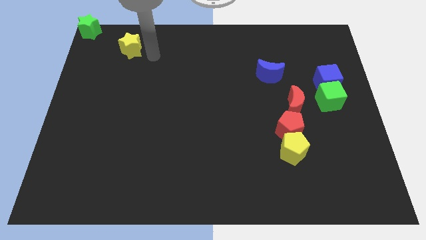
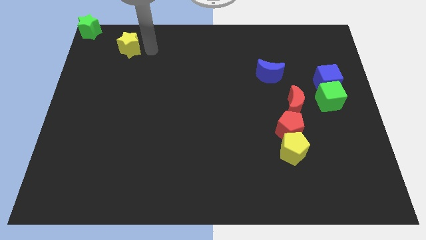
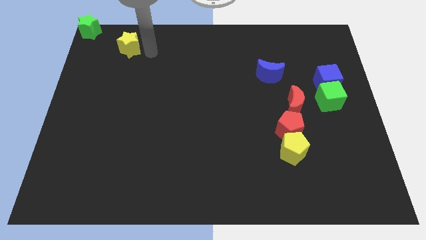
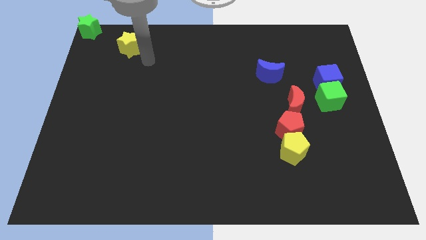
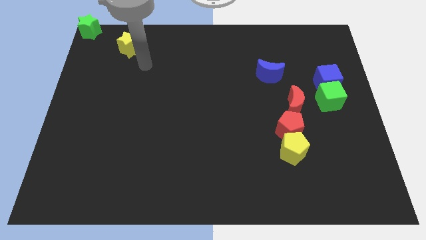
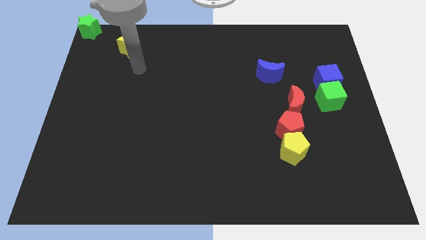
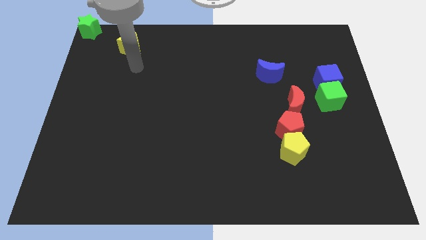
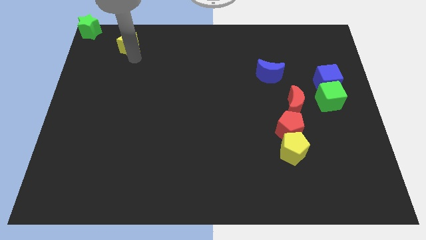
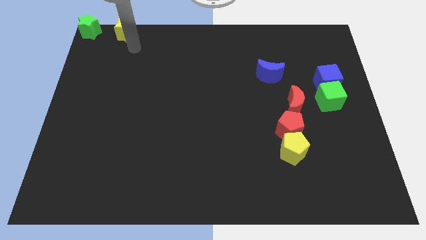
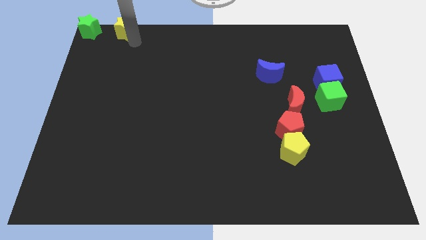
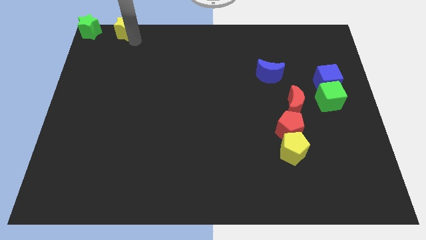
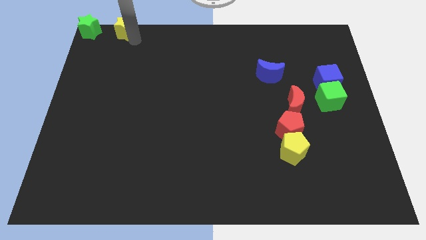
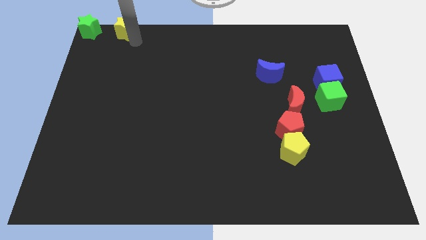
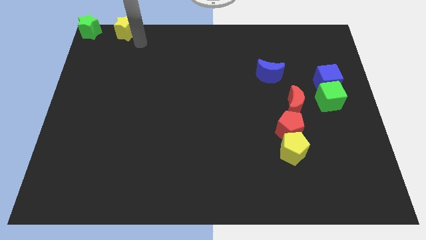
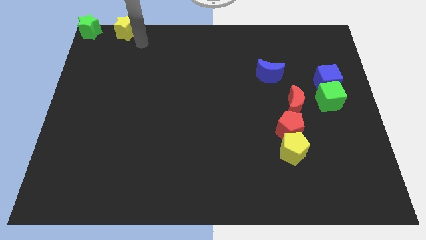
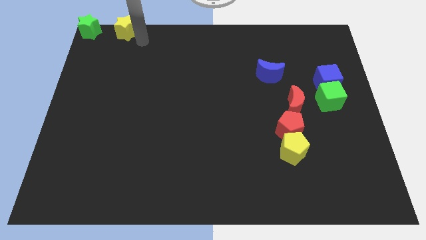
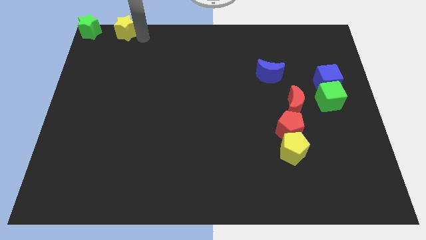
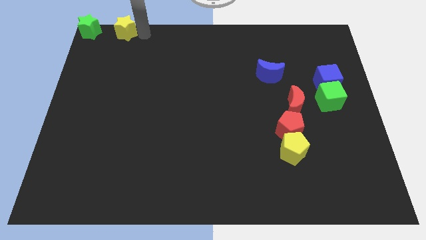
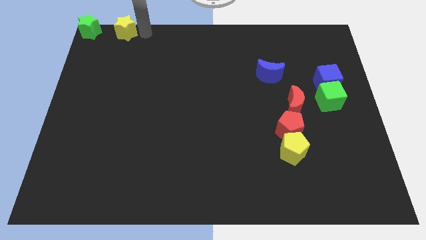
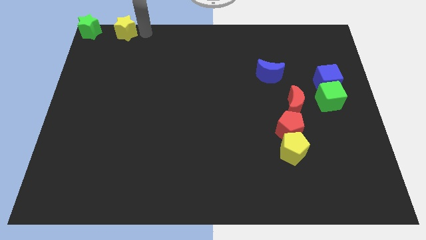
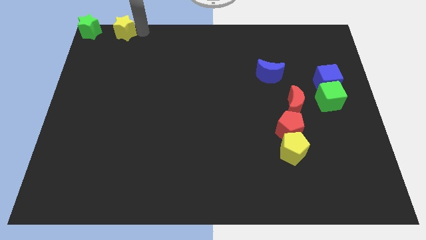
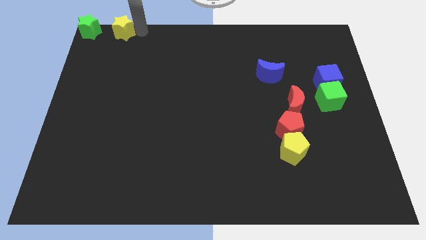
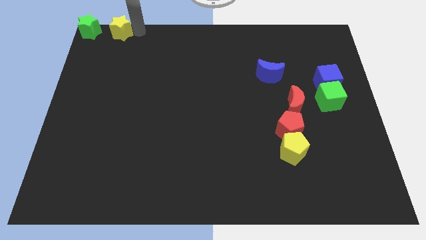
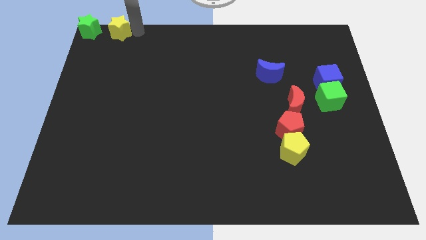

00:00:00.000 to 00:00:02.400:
push the yellow star parallel to the right of the green star

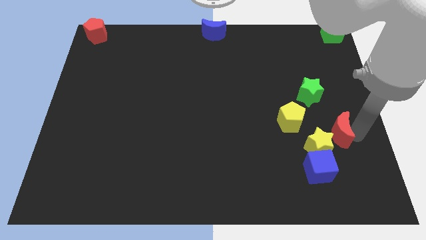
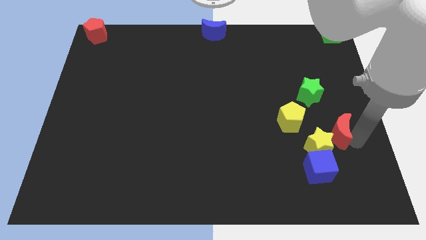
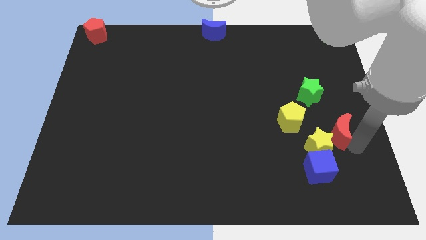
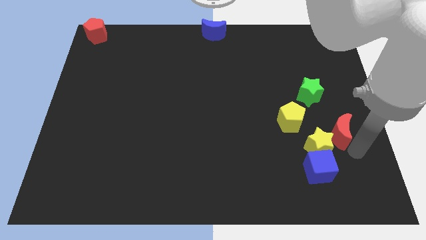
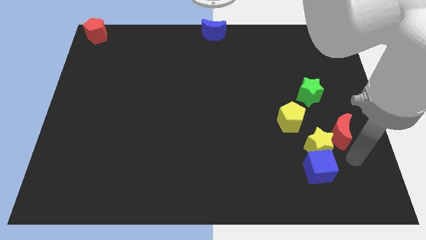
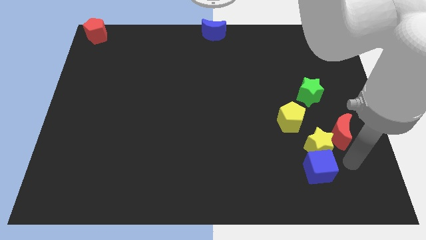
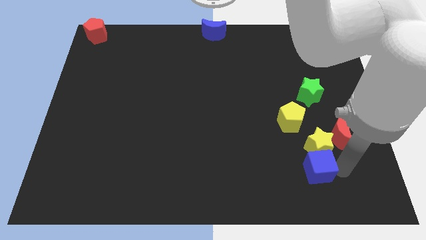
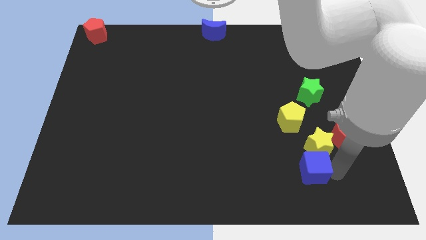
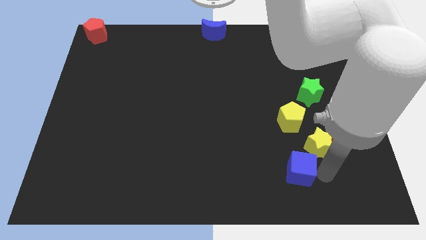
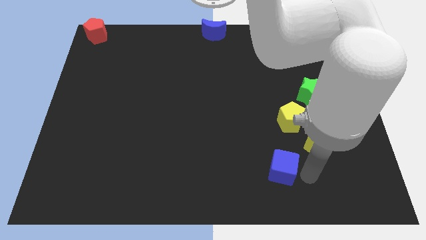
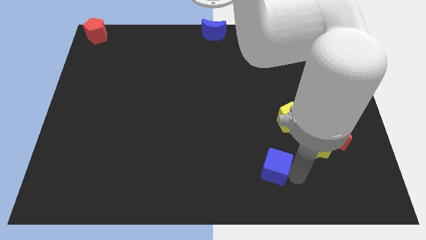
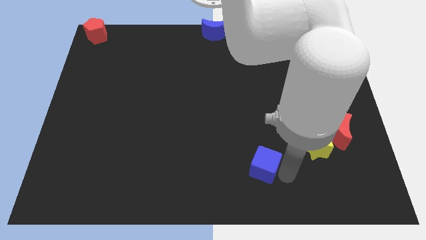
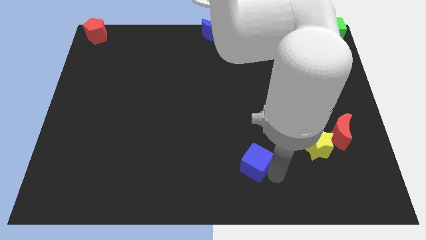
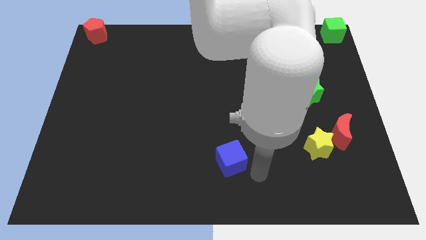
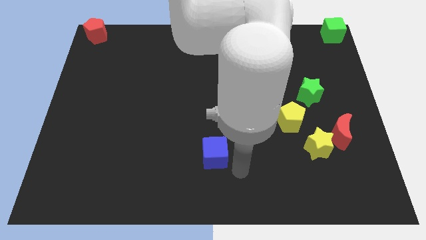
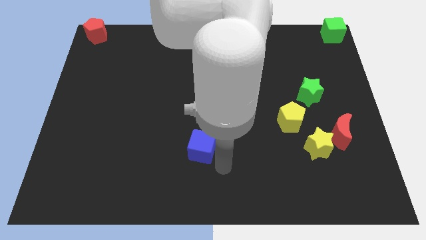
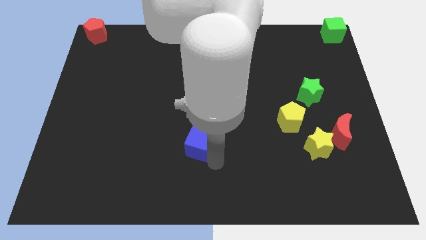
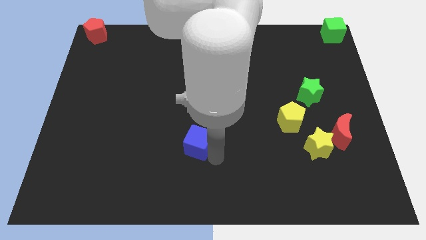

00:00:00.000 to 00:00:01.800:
push the blue cube to the left side

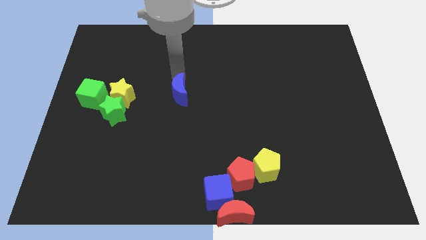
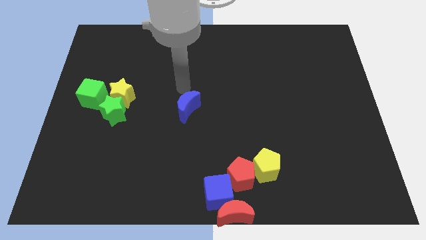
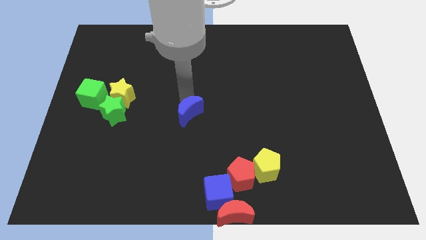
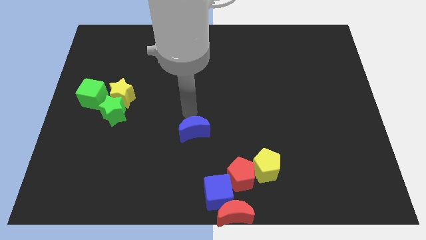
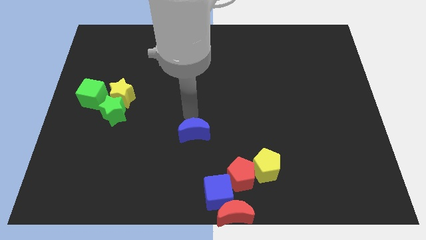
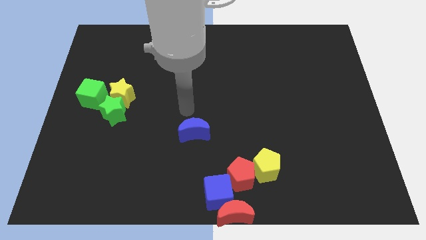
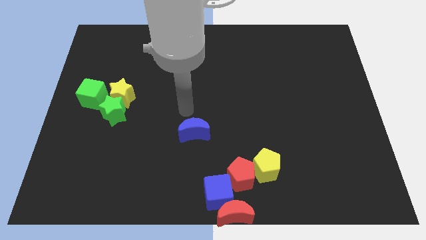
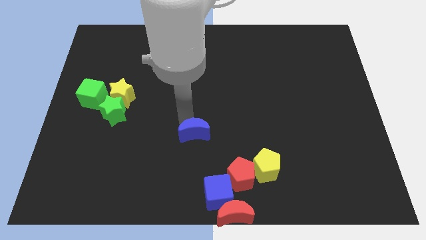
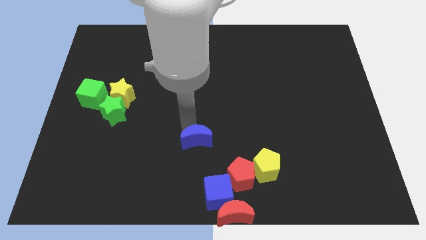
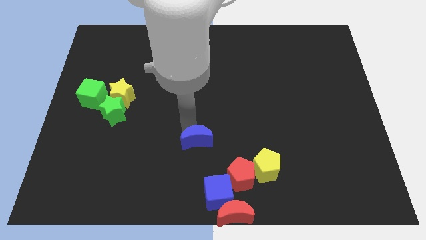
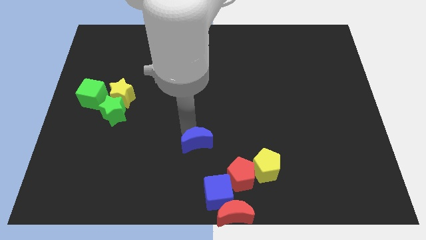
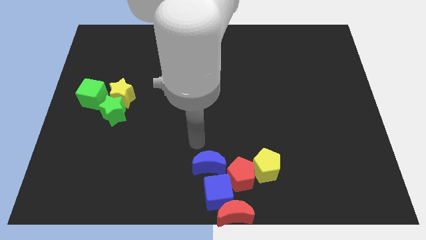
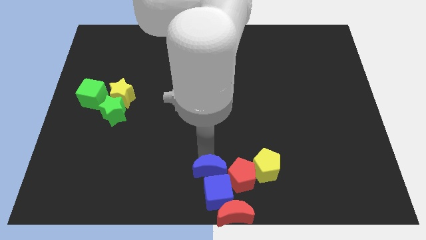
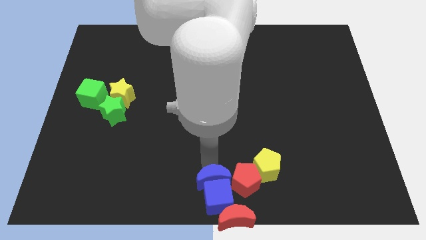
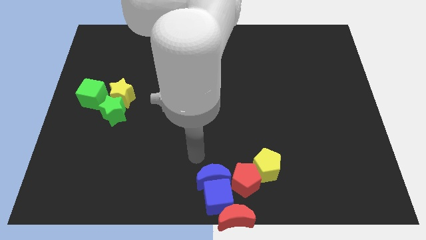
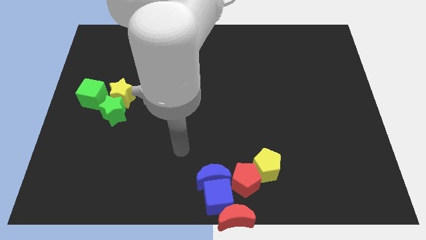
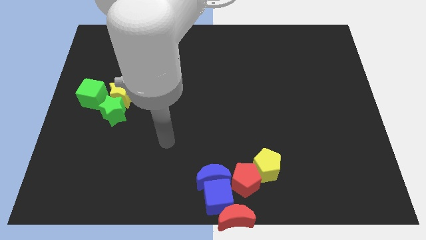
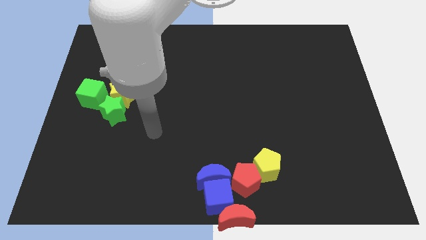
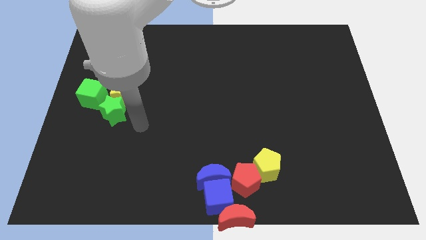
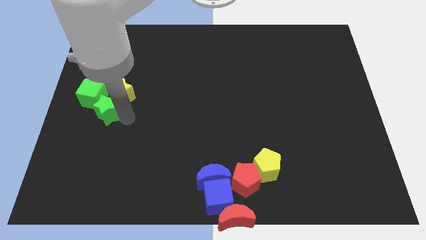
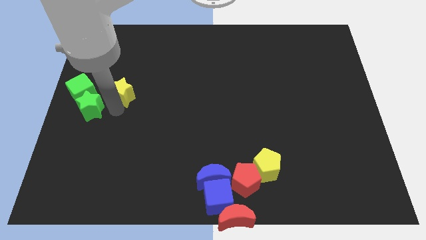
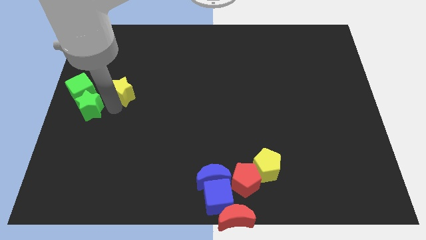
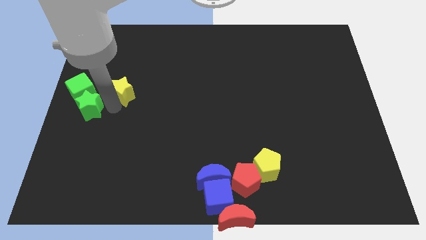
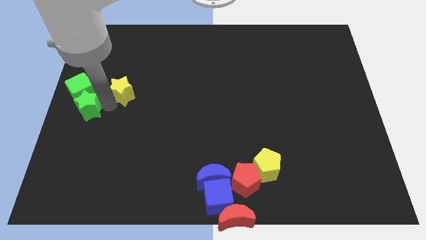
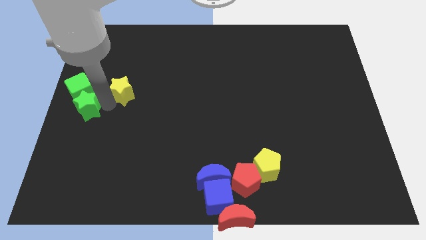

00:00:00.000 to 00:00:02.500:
push the blue moon into the blue cube

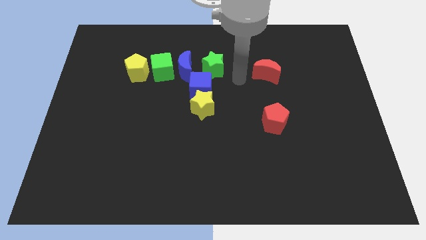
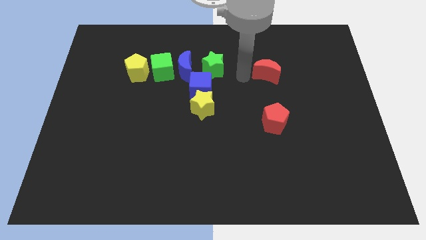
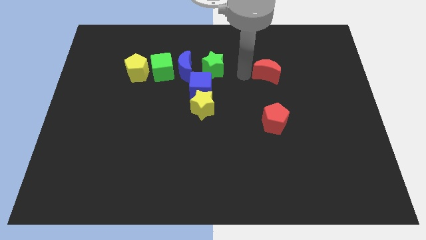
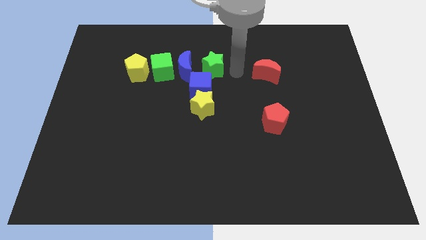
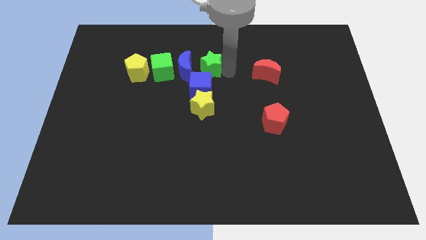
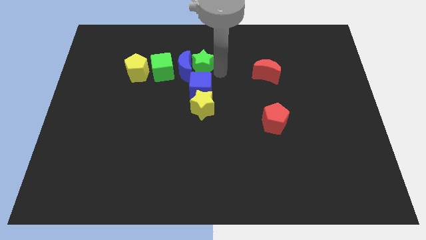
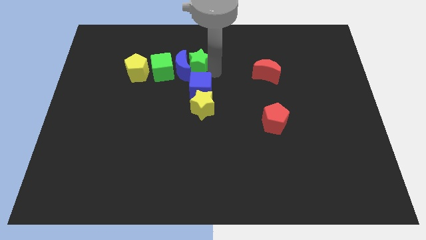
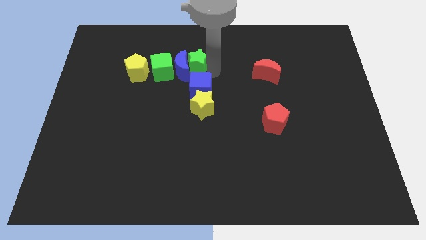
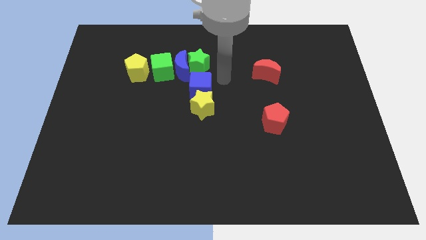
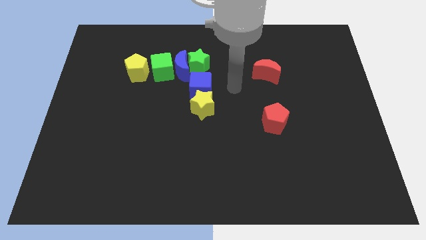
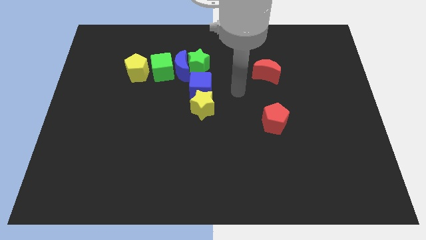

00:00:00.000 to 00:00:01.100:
push the green star into the blue crescent

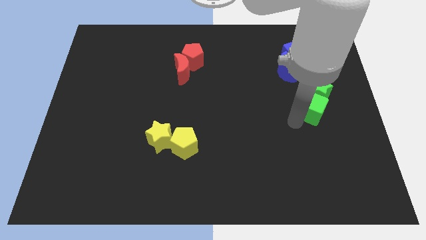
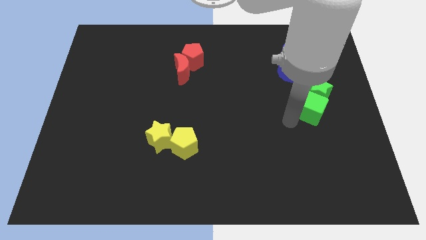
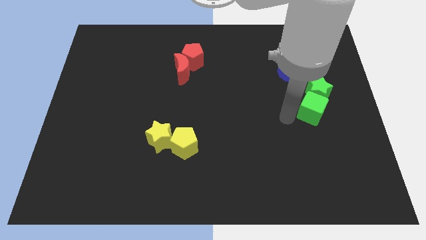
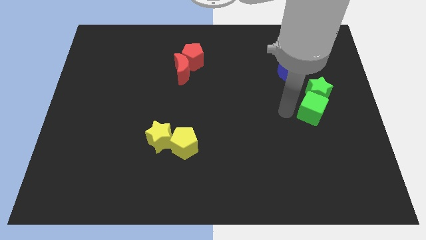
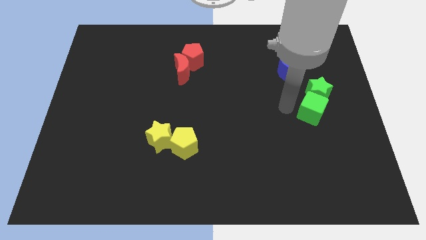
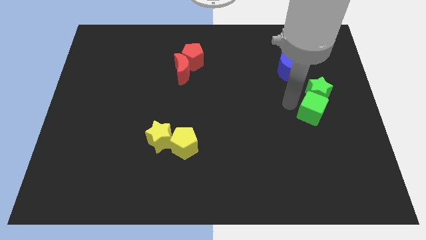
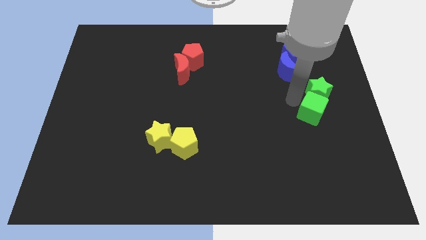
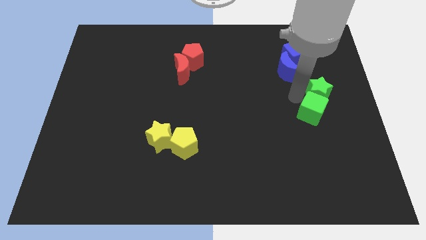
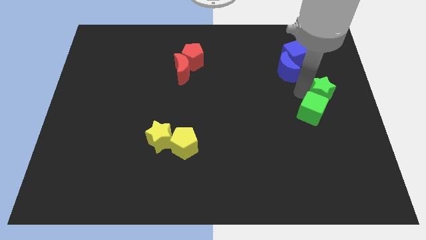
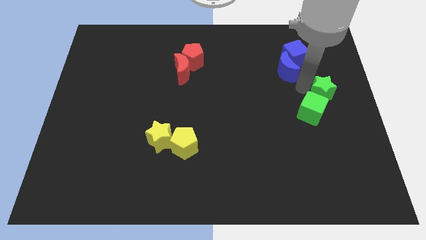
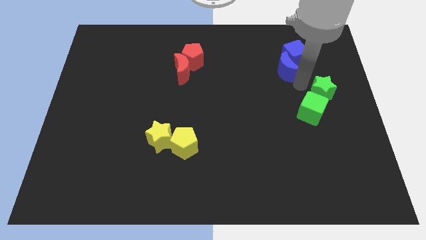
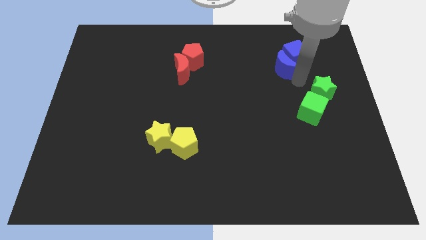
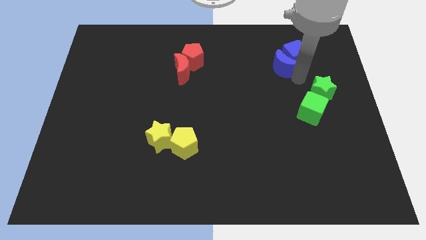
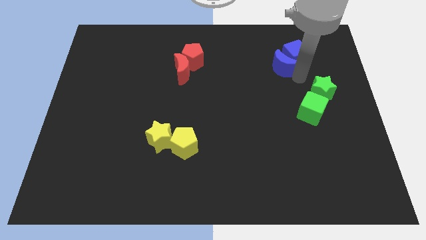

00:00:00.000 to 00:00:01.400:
move your arm away from the green cube
